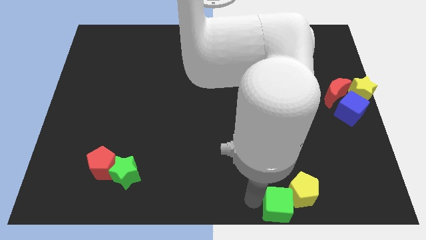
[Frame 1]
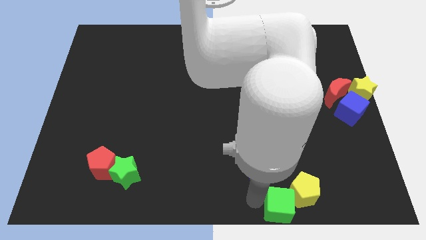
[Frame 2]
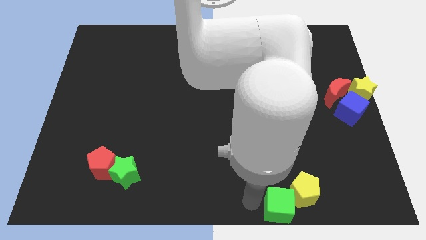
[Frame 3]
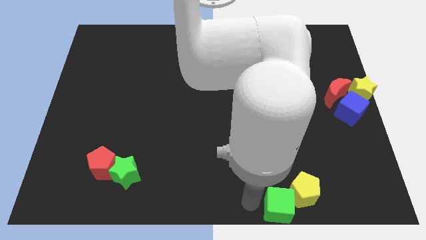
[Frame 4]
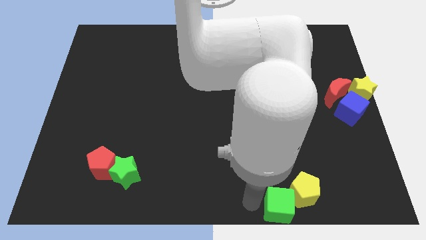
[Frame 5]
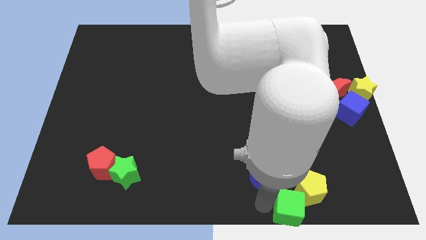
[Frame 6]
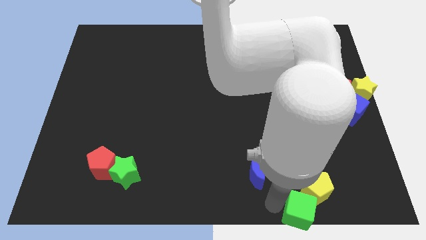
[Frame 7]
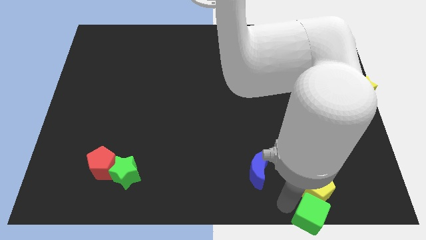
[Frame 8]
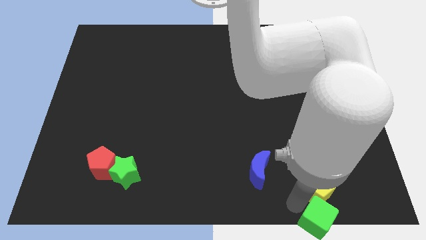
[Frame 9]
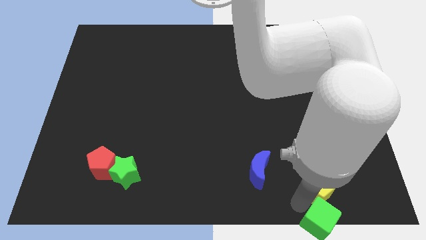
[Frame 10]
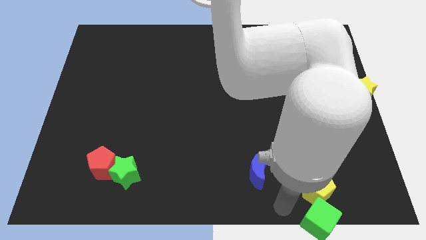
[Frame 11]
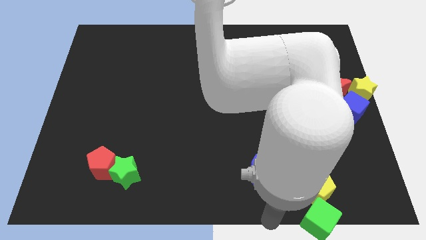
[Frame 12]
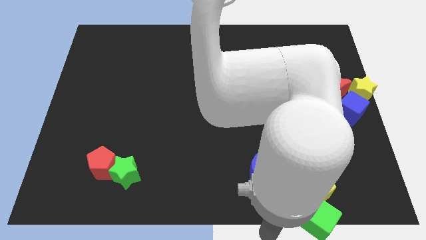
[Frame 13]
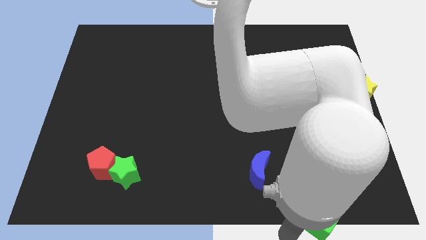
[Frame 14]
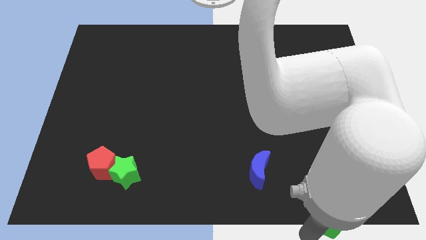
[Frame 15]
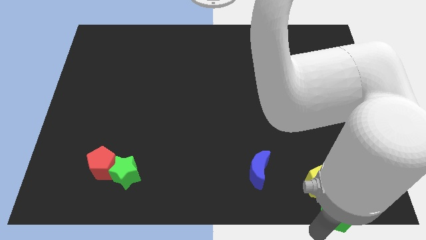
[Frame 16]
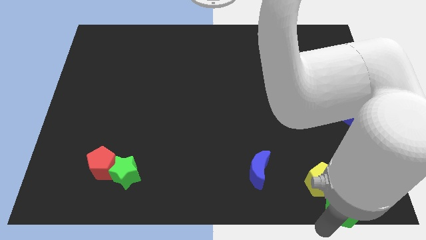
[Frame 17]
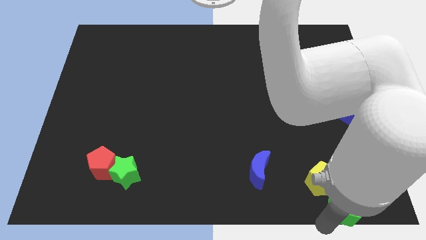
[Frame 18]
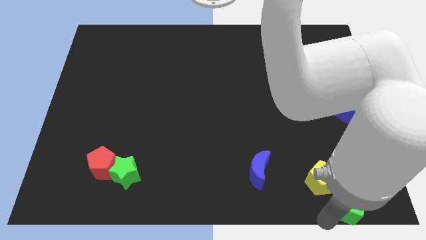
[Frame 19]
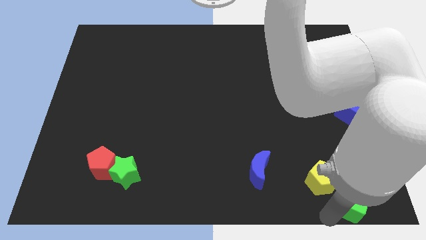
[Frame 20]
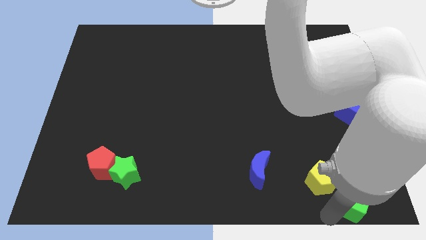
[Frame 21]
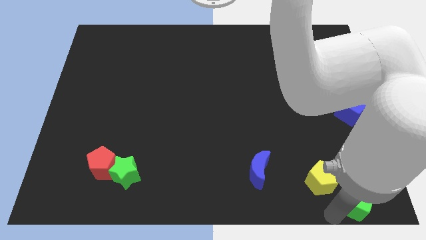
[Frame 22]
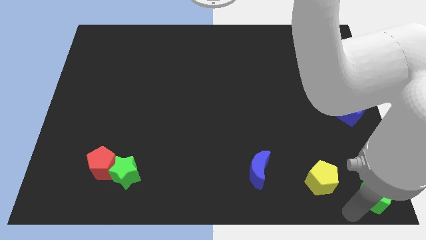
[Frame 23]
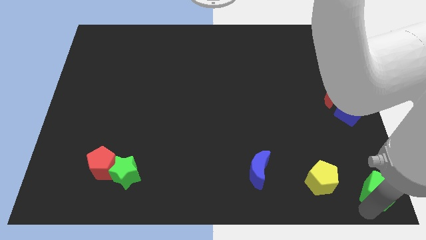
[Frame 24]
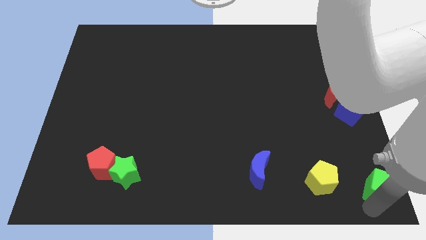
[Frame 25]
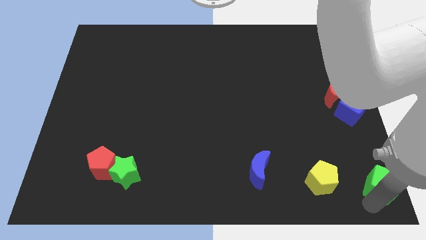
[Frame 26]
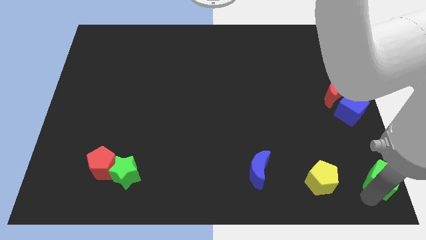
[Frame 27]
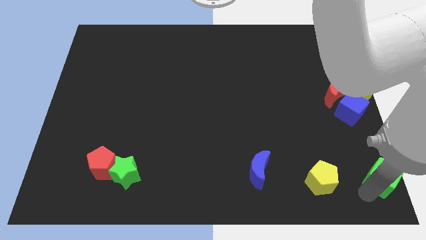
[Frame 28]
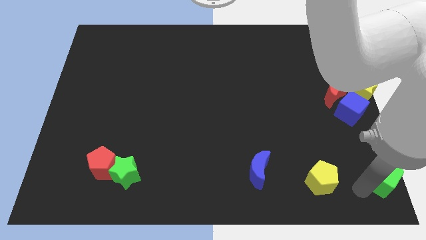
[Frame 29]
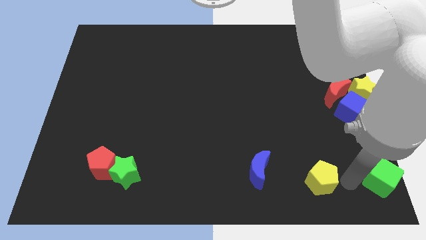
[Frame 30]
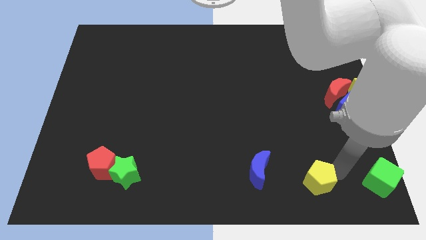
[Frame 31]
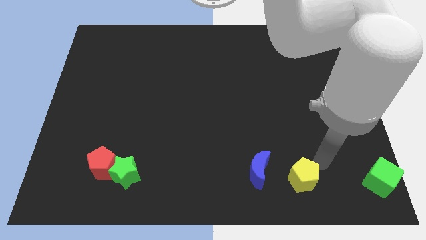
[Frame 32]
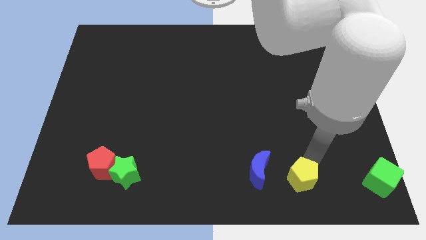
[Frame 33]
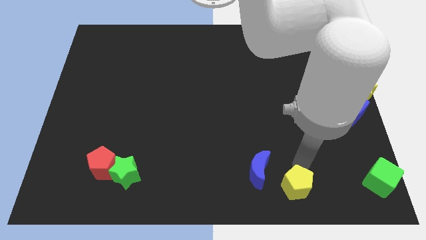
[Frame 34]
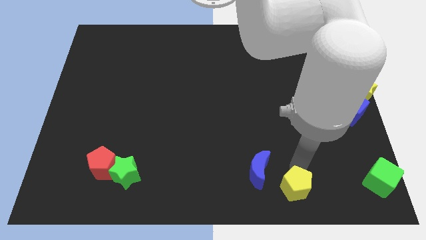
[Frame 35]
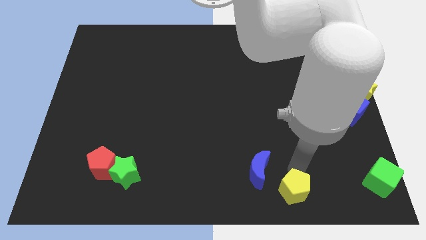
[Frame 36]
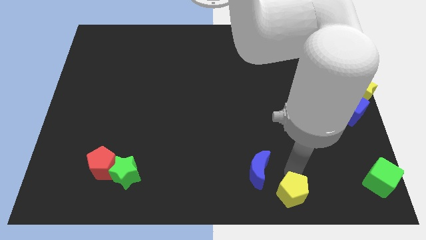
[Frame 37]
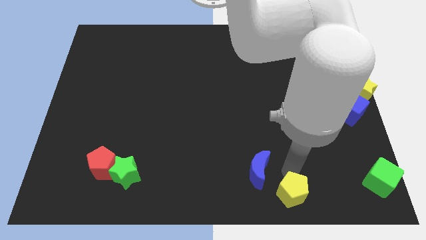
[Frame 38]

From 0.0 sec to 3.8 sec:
place the green cube at the bottom right of the board

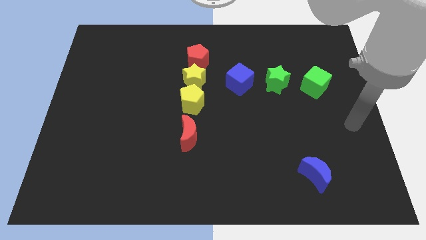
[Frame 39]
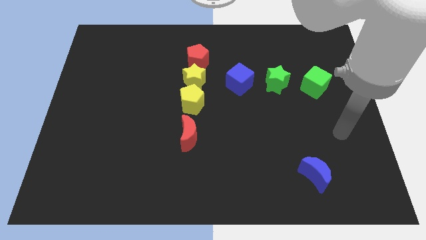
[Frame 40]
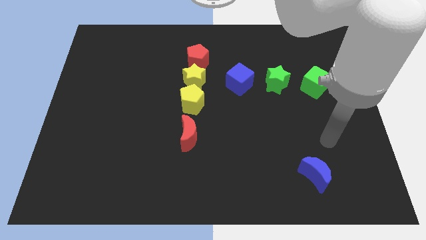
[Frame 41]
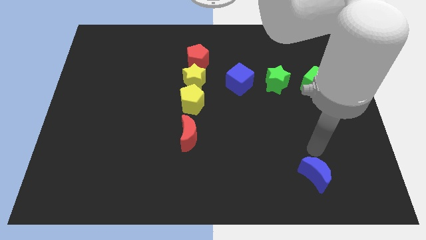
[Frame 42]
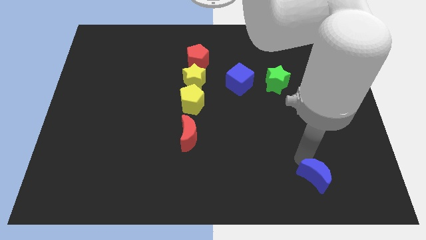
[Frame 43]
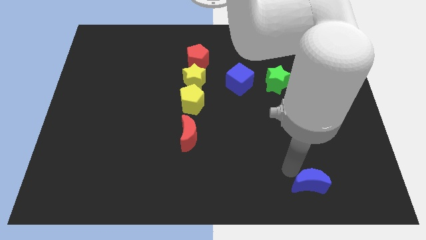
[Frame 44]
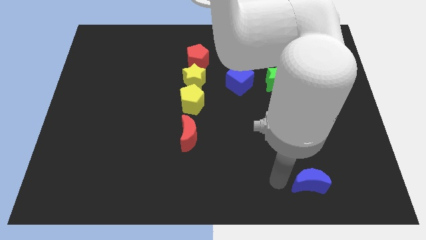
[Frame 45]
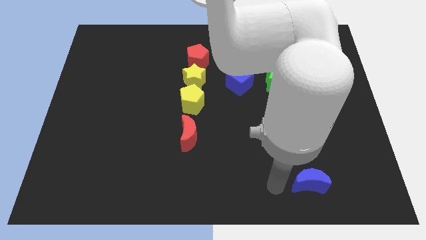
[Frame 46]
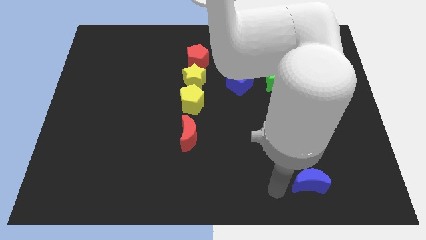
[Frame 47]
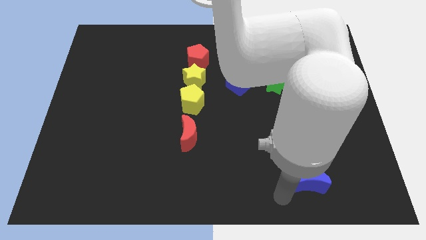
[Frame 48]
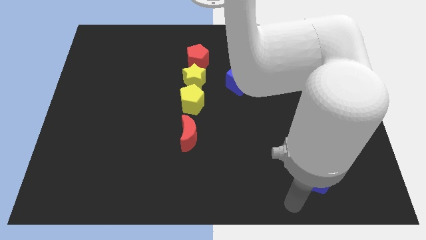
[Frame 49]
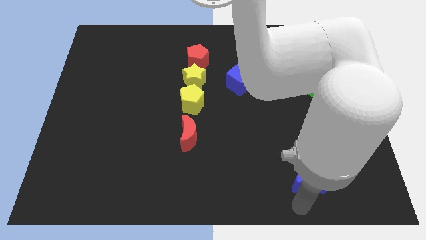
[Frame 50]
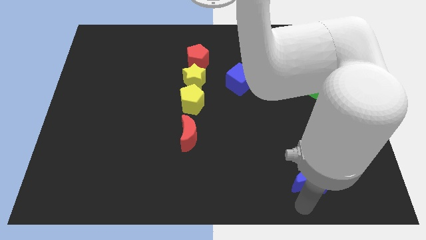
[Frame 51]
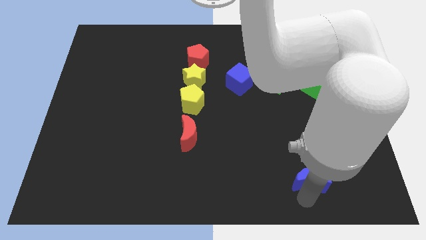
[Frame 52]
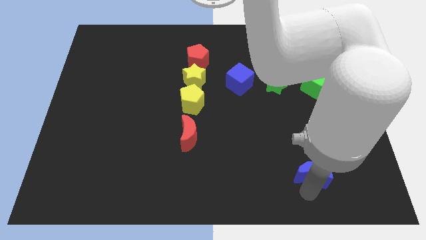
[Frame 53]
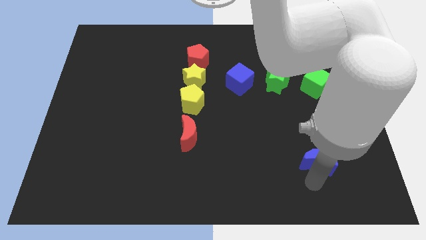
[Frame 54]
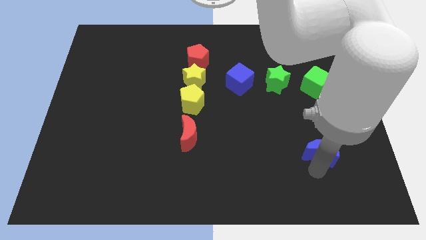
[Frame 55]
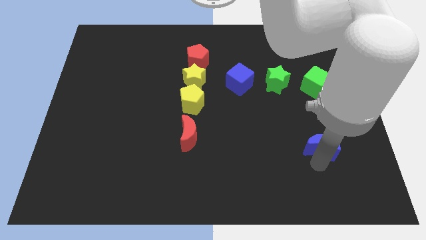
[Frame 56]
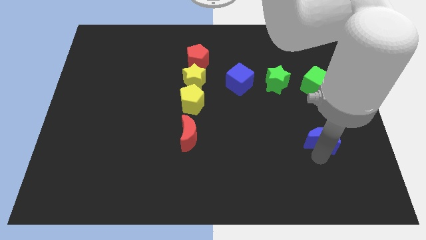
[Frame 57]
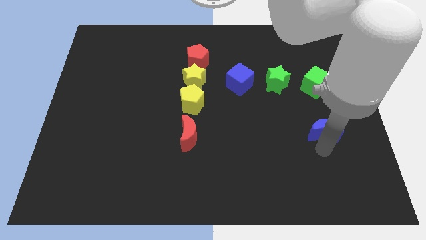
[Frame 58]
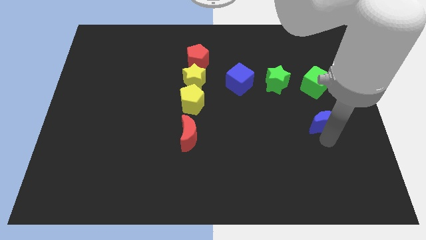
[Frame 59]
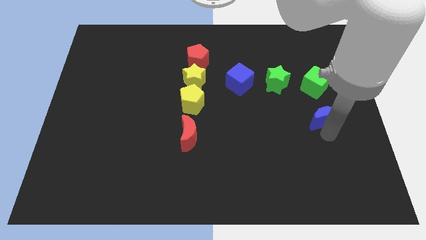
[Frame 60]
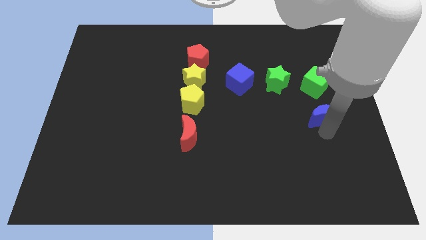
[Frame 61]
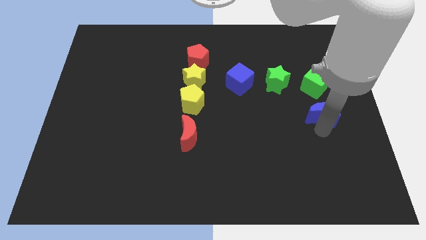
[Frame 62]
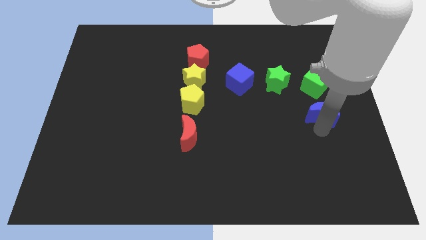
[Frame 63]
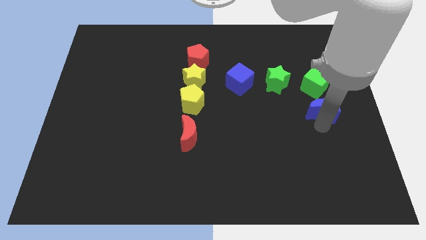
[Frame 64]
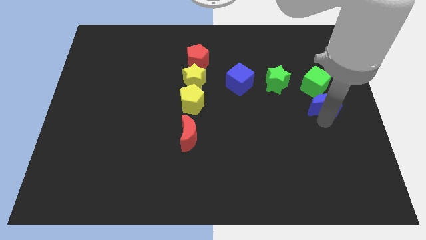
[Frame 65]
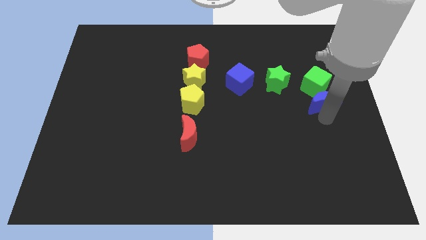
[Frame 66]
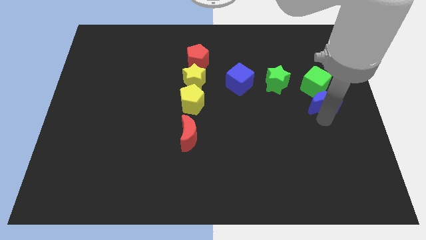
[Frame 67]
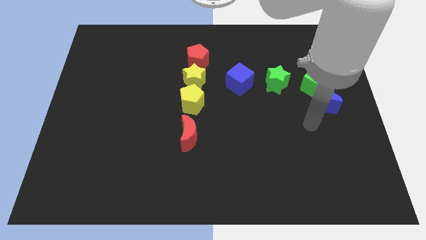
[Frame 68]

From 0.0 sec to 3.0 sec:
push the blue moon to the bottom side of the green cube

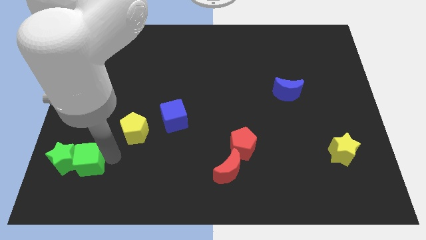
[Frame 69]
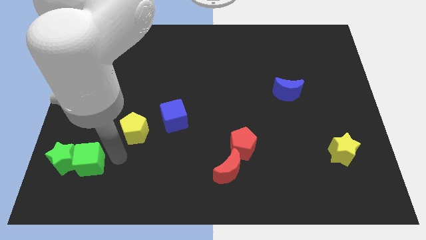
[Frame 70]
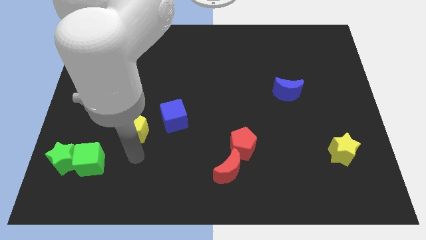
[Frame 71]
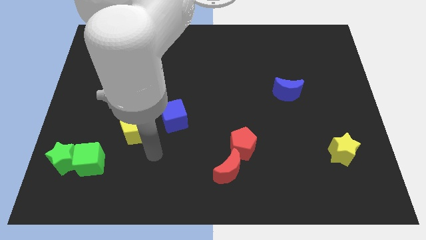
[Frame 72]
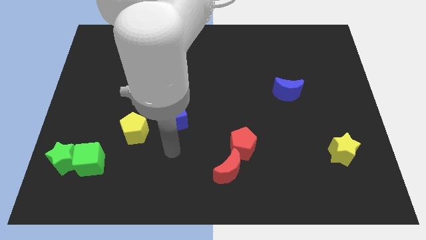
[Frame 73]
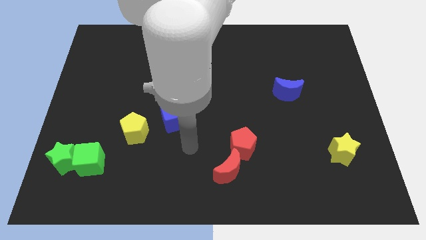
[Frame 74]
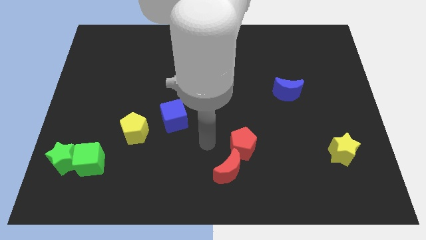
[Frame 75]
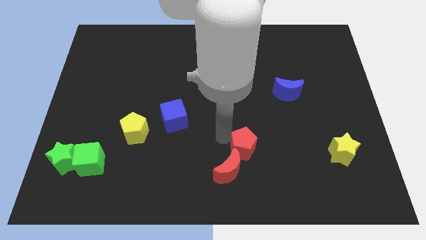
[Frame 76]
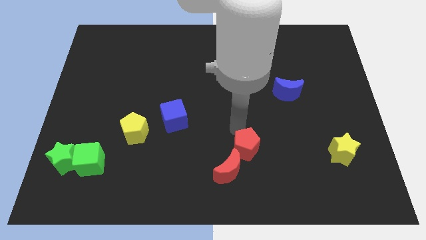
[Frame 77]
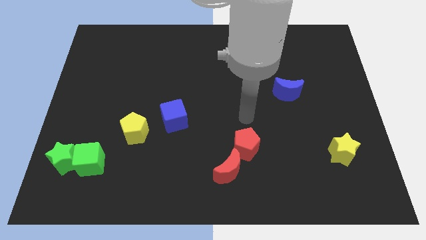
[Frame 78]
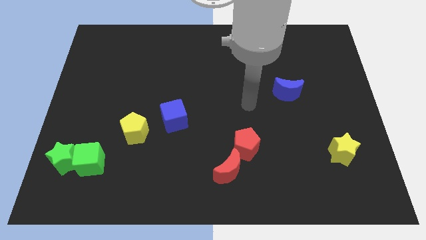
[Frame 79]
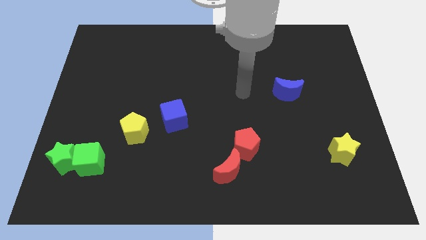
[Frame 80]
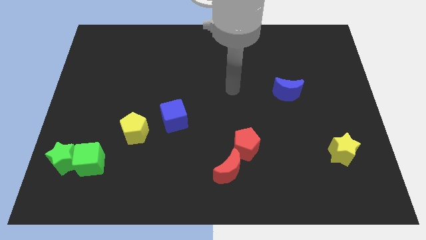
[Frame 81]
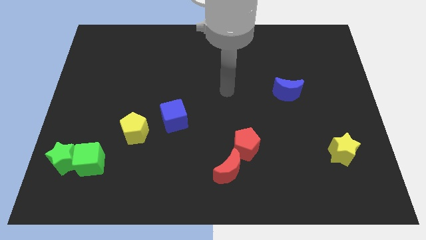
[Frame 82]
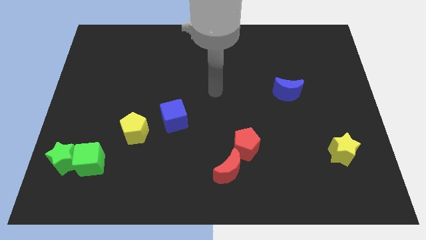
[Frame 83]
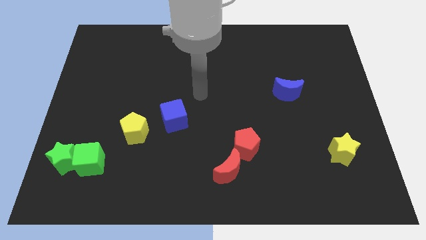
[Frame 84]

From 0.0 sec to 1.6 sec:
move your arm towards the blue cube

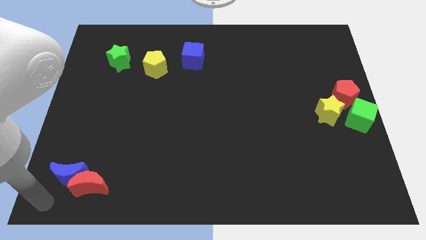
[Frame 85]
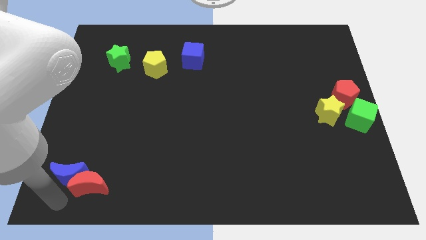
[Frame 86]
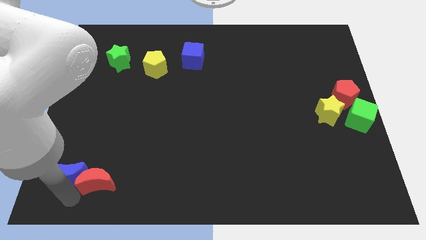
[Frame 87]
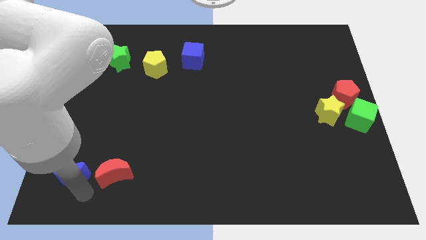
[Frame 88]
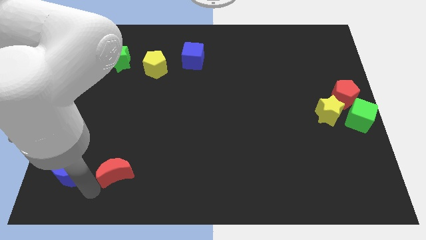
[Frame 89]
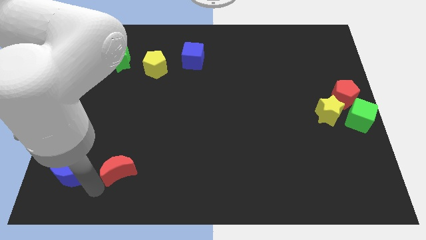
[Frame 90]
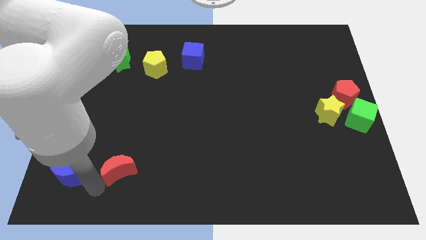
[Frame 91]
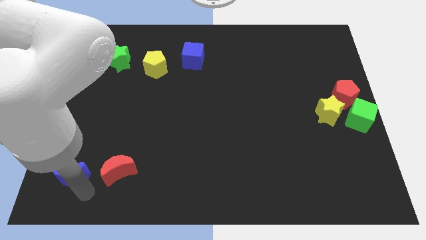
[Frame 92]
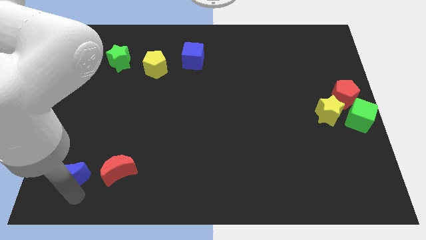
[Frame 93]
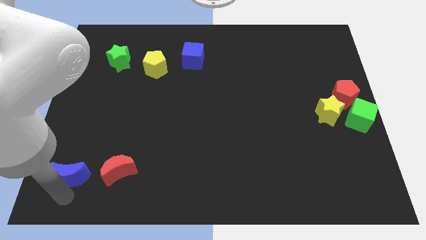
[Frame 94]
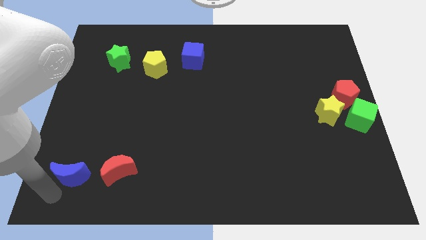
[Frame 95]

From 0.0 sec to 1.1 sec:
separate the red moon from the blue moon
